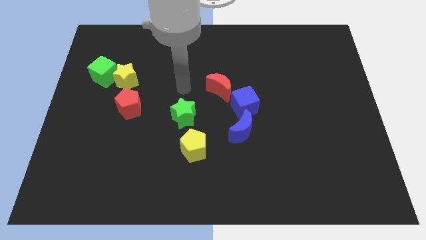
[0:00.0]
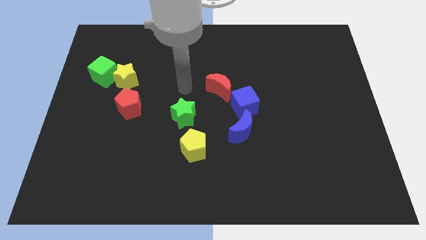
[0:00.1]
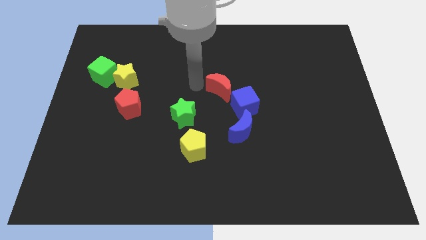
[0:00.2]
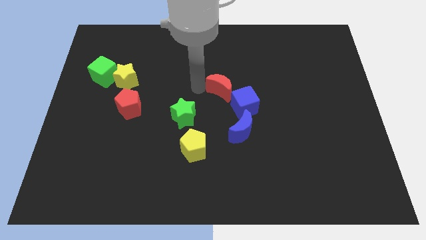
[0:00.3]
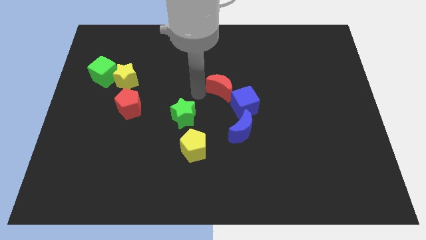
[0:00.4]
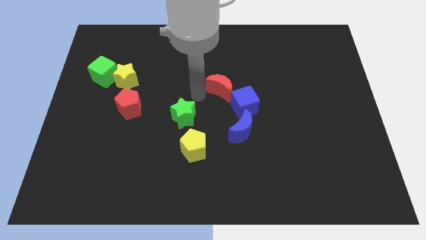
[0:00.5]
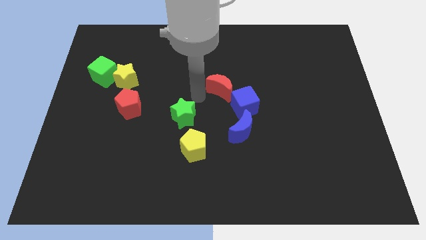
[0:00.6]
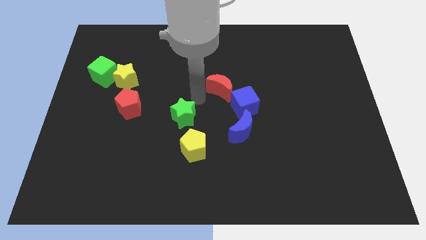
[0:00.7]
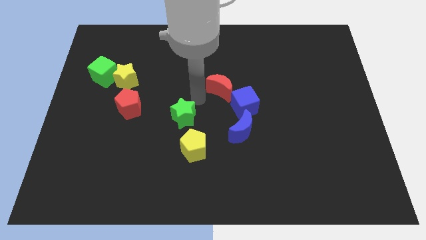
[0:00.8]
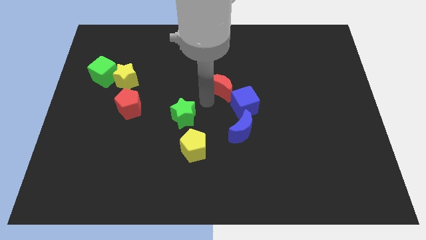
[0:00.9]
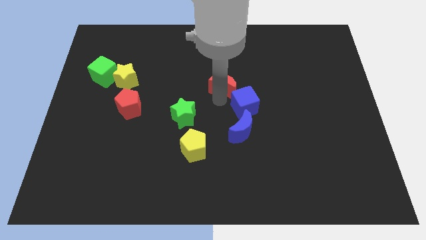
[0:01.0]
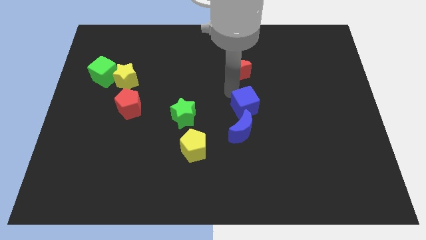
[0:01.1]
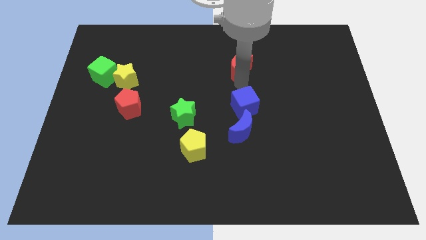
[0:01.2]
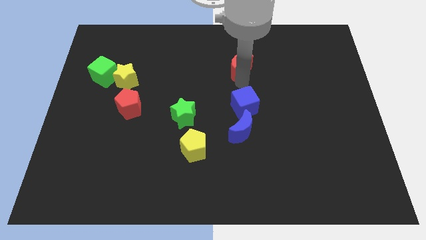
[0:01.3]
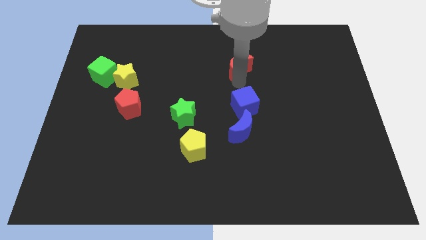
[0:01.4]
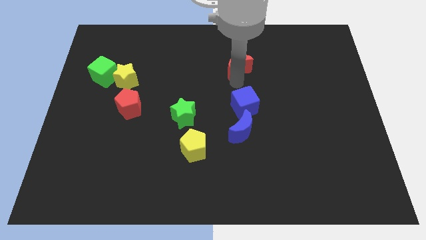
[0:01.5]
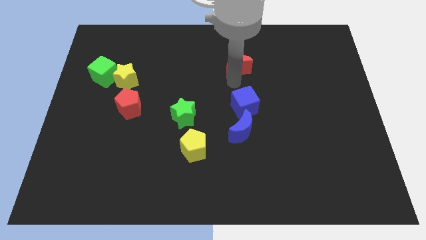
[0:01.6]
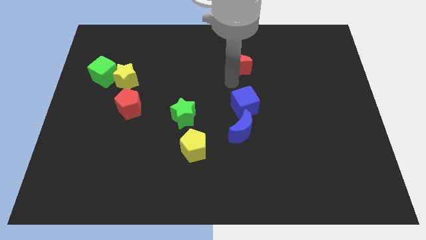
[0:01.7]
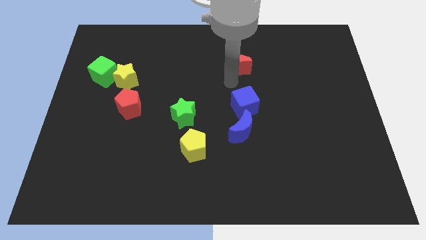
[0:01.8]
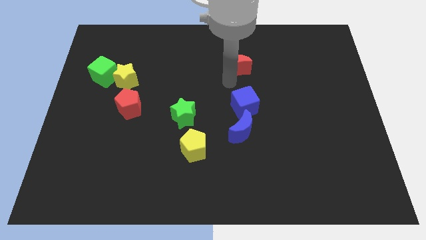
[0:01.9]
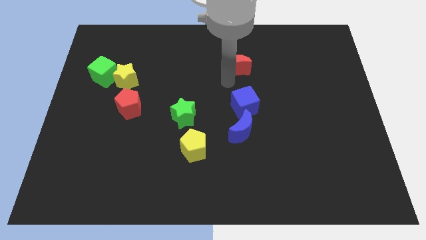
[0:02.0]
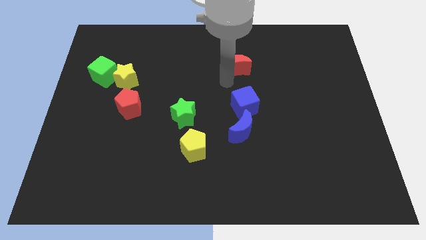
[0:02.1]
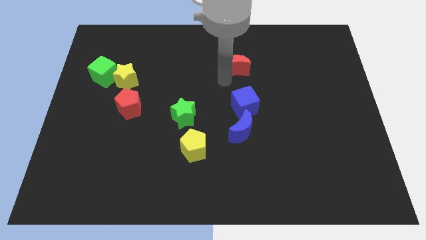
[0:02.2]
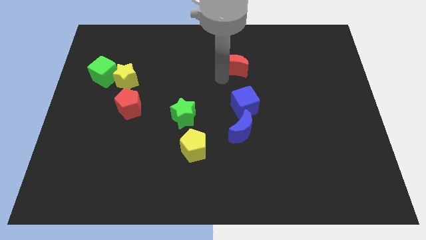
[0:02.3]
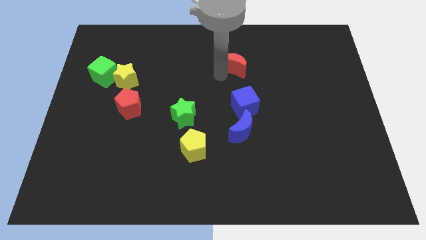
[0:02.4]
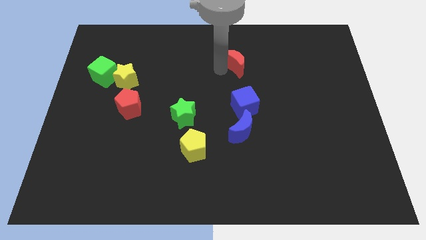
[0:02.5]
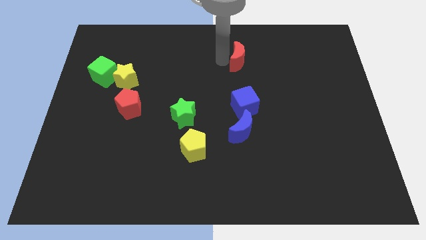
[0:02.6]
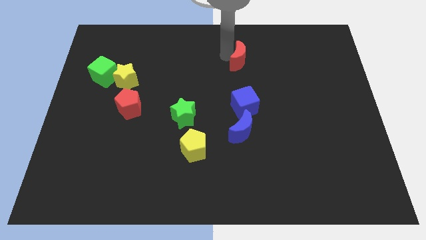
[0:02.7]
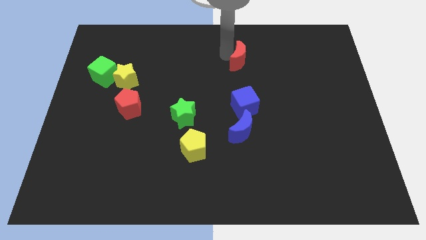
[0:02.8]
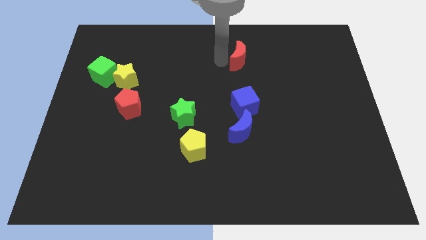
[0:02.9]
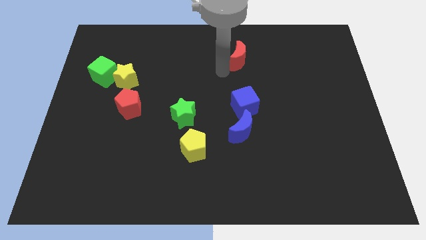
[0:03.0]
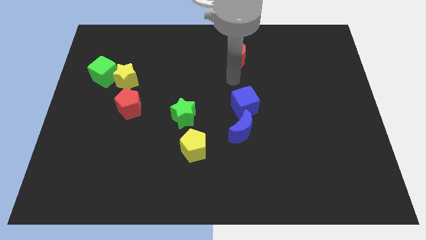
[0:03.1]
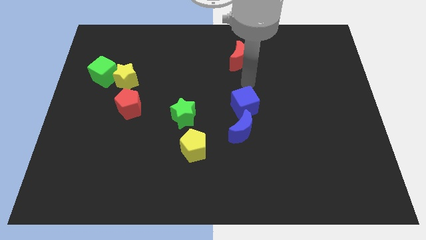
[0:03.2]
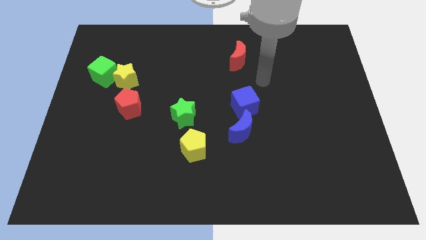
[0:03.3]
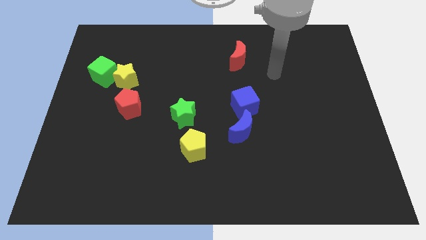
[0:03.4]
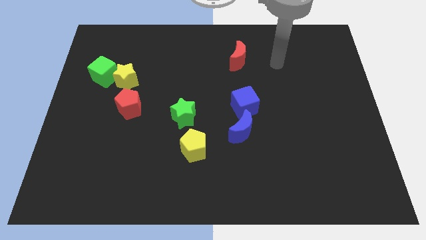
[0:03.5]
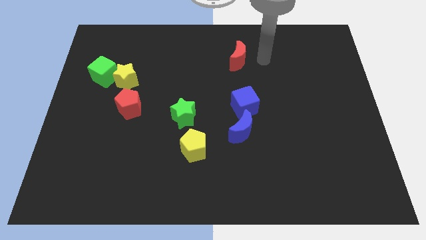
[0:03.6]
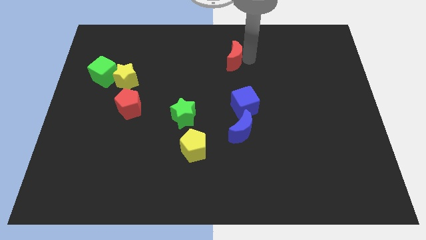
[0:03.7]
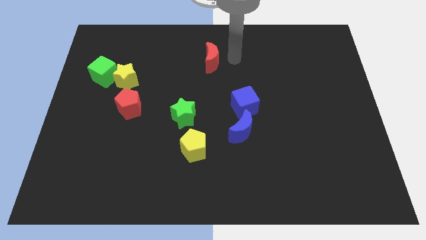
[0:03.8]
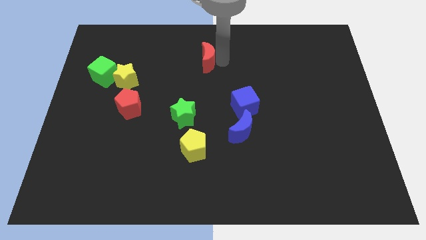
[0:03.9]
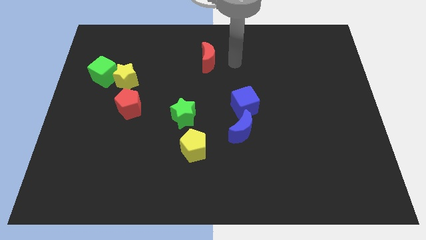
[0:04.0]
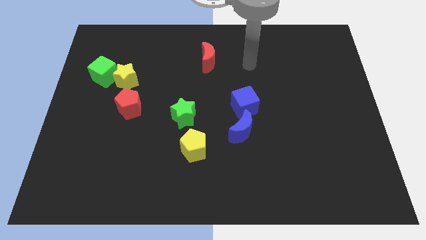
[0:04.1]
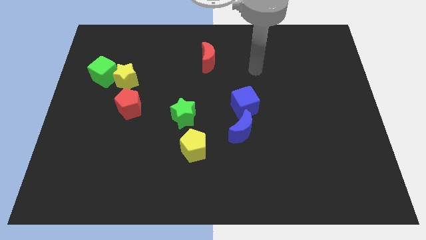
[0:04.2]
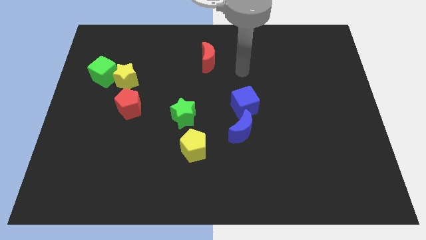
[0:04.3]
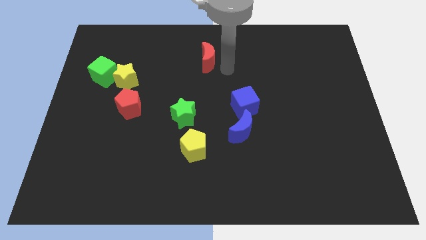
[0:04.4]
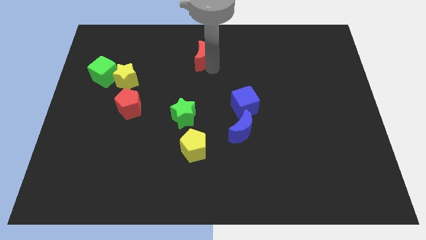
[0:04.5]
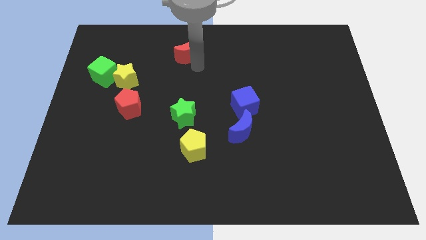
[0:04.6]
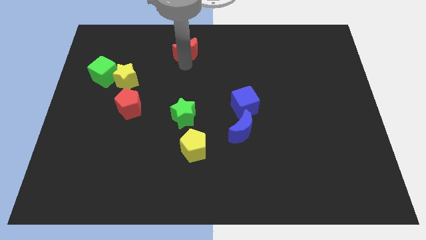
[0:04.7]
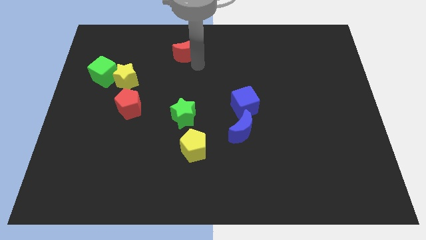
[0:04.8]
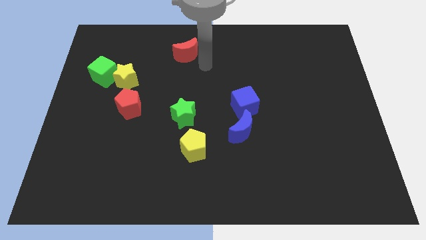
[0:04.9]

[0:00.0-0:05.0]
move the red crescent away from the blue cube

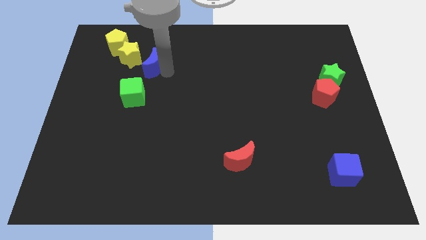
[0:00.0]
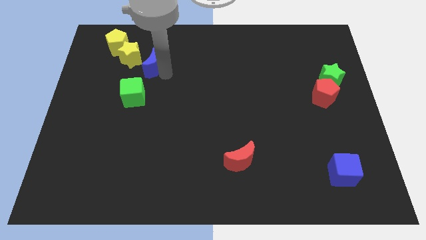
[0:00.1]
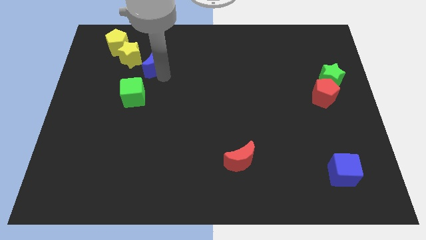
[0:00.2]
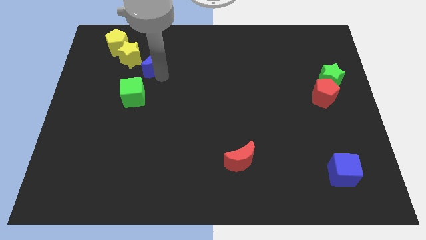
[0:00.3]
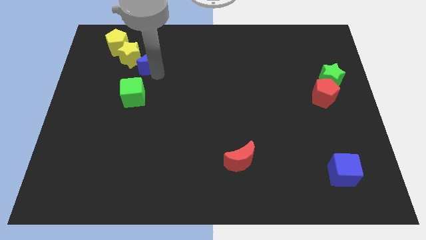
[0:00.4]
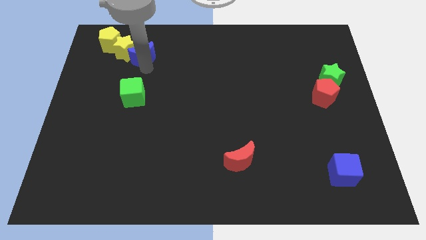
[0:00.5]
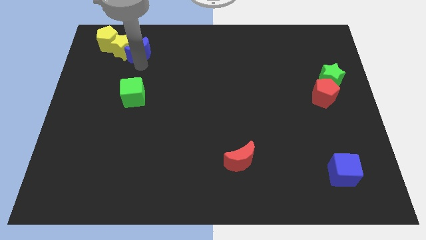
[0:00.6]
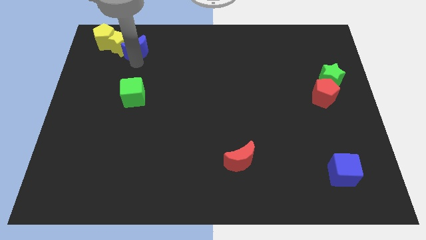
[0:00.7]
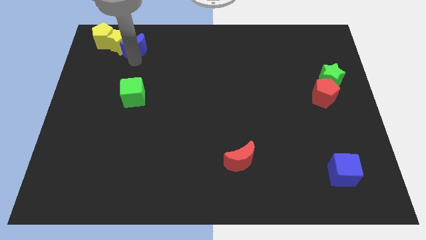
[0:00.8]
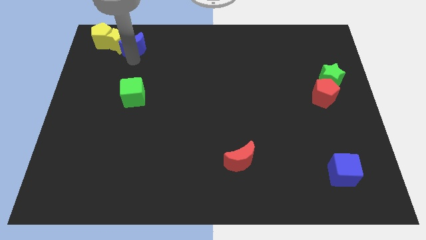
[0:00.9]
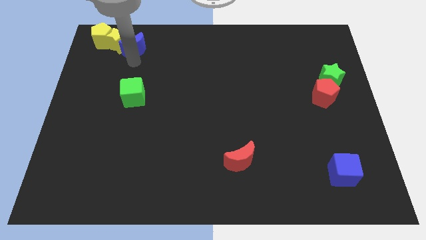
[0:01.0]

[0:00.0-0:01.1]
push blue crescent and yellow blocks in to top left corner

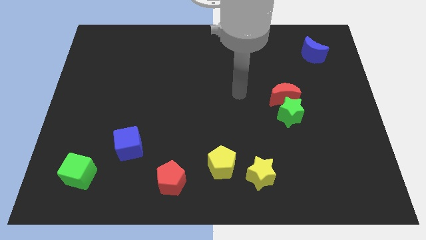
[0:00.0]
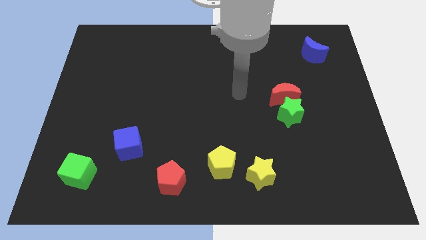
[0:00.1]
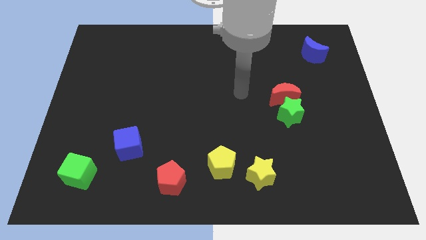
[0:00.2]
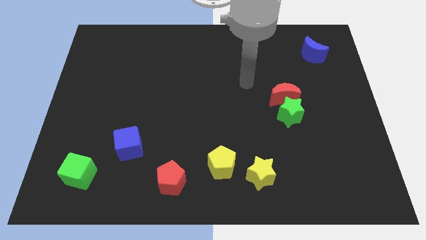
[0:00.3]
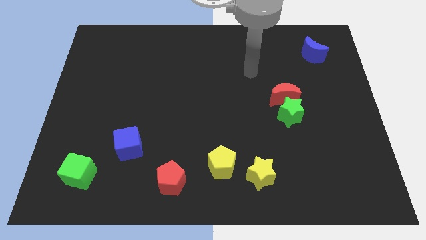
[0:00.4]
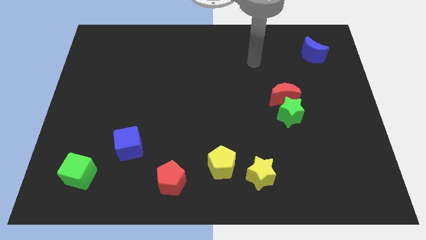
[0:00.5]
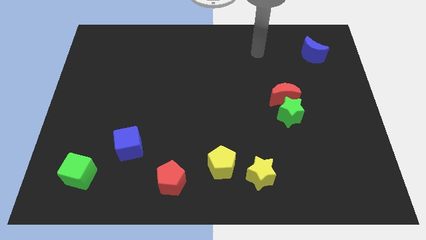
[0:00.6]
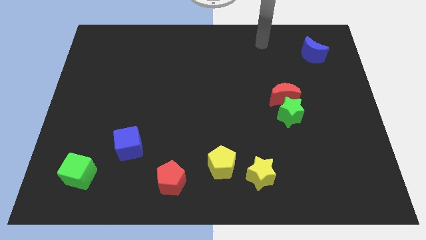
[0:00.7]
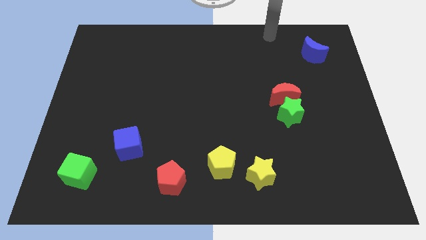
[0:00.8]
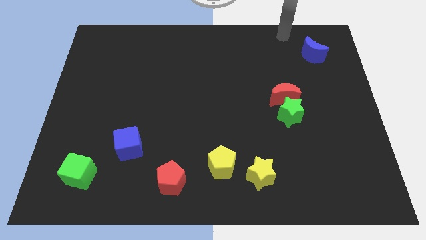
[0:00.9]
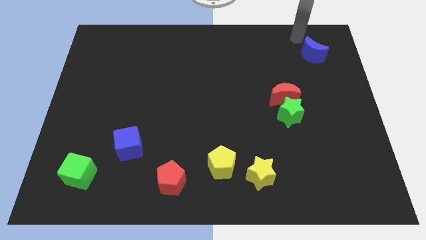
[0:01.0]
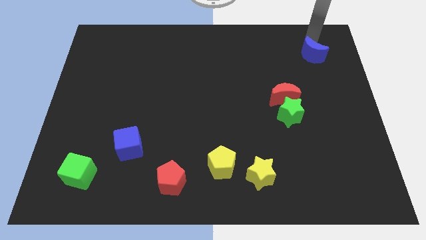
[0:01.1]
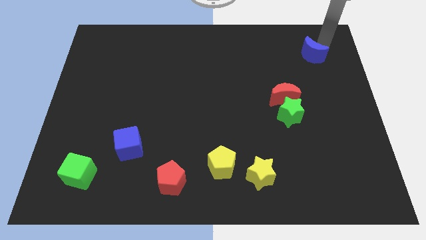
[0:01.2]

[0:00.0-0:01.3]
go near the blue moon

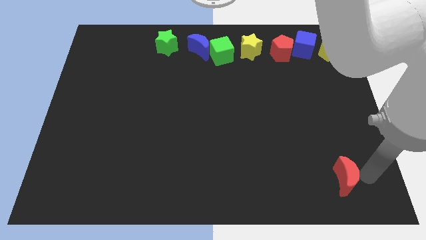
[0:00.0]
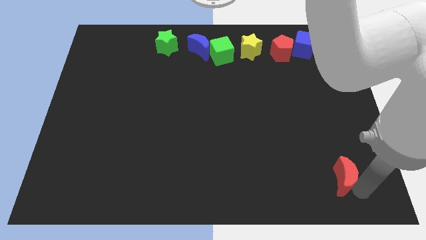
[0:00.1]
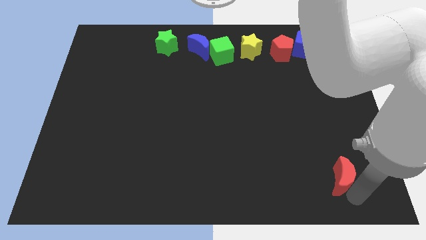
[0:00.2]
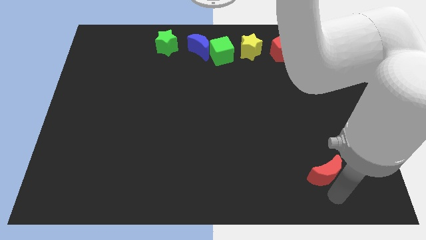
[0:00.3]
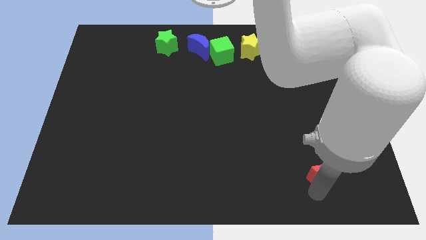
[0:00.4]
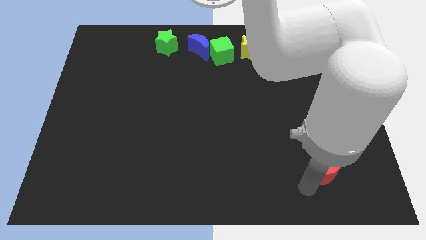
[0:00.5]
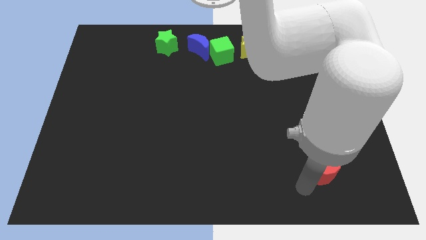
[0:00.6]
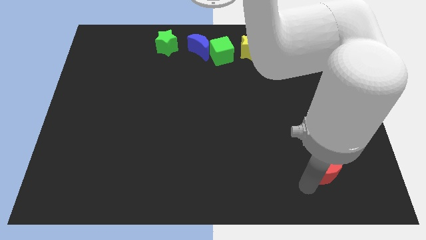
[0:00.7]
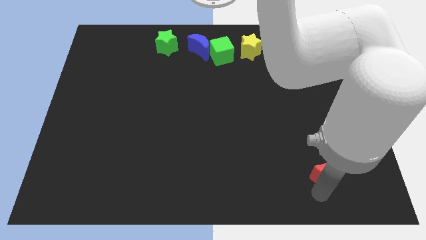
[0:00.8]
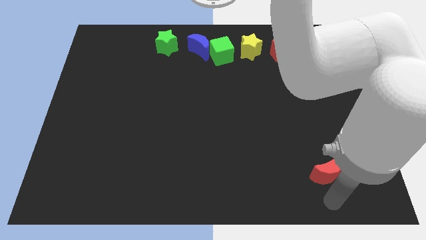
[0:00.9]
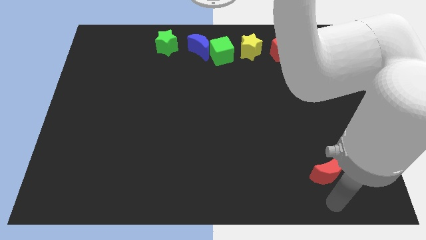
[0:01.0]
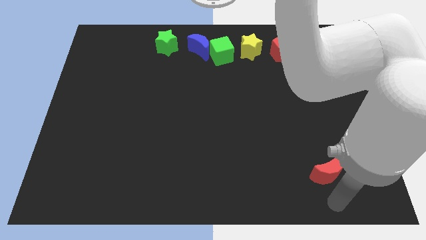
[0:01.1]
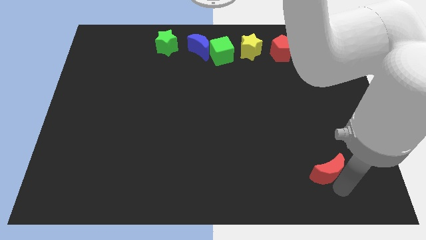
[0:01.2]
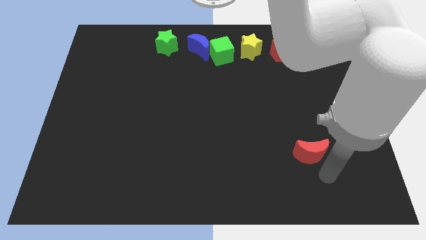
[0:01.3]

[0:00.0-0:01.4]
slightly move the red moon to bottom center
